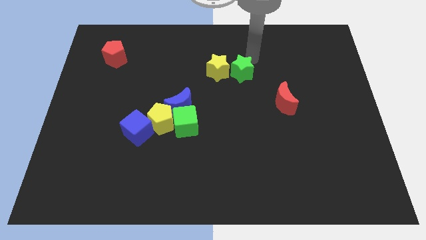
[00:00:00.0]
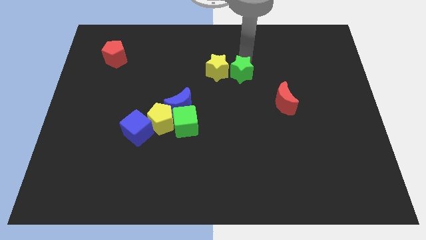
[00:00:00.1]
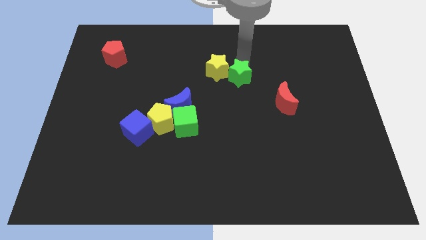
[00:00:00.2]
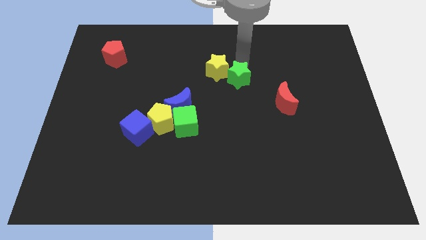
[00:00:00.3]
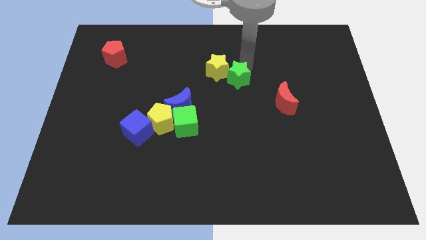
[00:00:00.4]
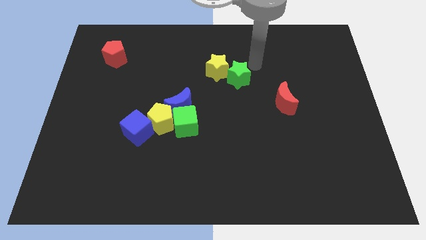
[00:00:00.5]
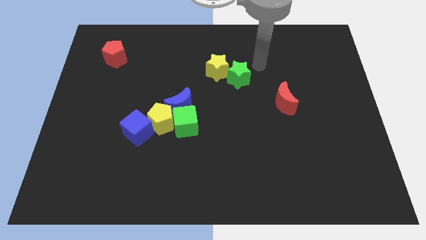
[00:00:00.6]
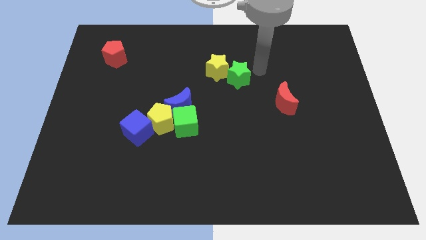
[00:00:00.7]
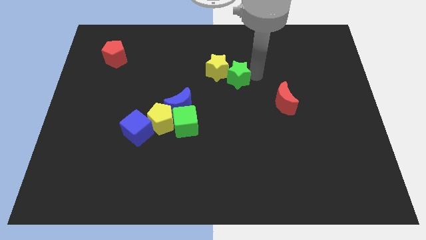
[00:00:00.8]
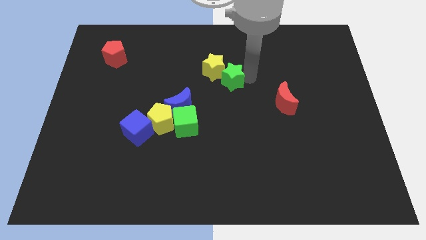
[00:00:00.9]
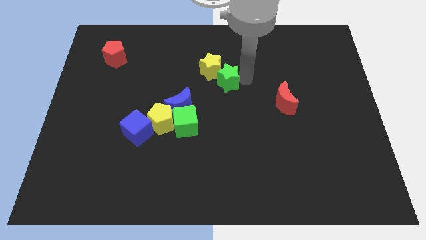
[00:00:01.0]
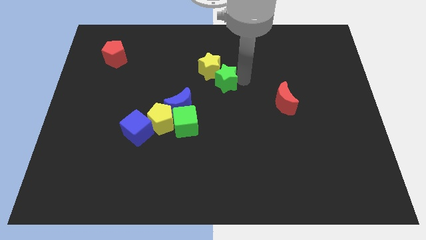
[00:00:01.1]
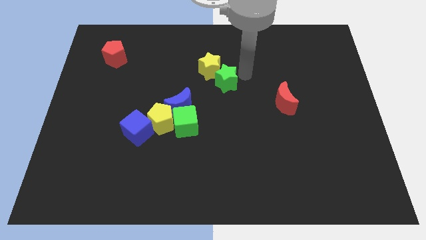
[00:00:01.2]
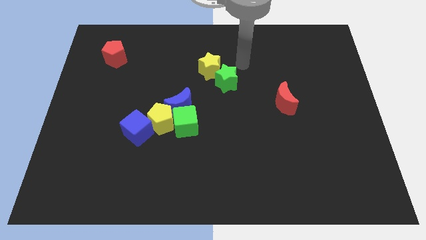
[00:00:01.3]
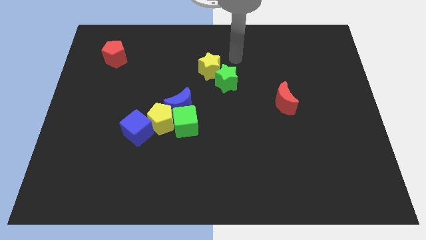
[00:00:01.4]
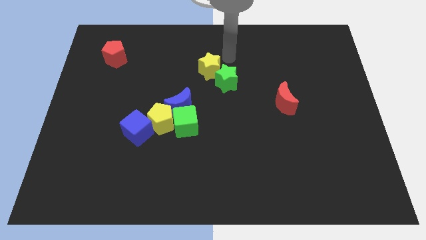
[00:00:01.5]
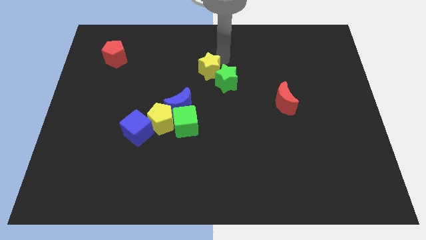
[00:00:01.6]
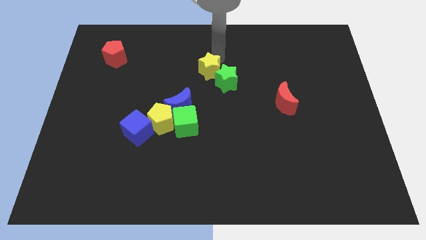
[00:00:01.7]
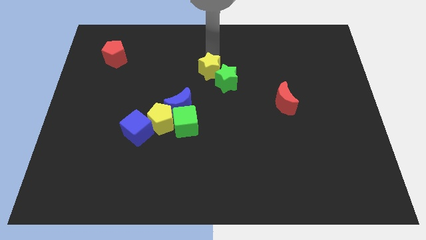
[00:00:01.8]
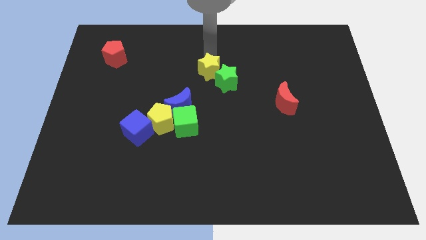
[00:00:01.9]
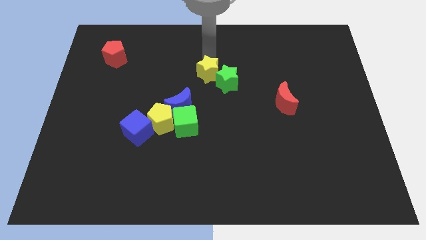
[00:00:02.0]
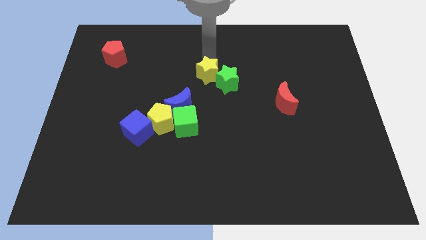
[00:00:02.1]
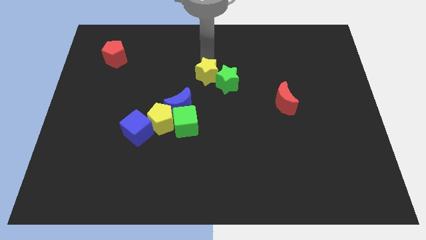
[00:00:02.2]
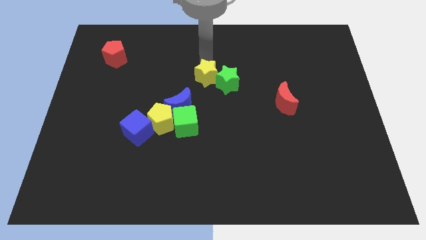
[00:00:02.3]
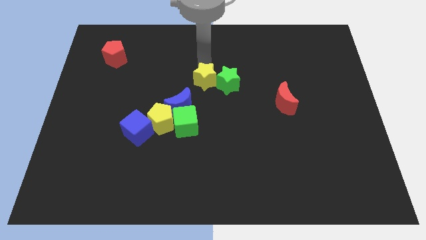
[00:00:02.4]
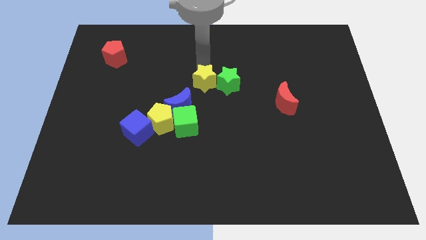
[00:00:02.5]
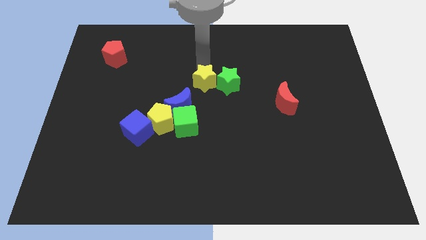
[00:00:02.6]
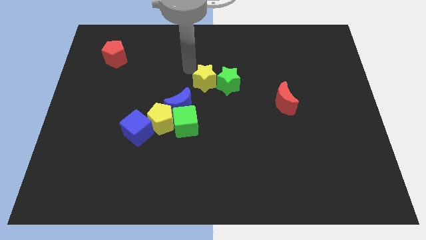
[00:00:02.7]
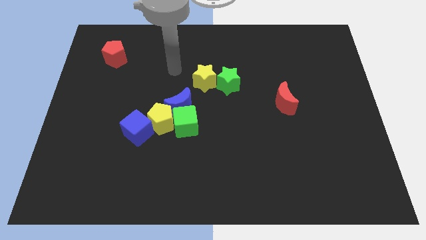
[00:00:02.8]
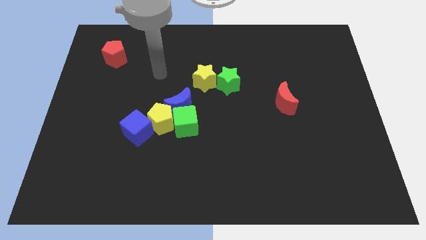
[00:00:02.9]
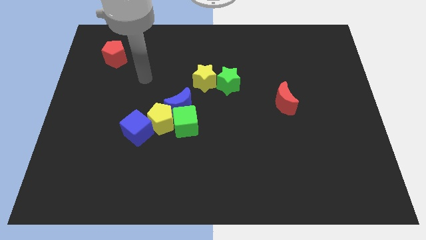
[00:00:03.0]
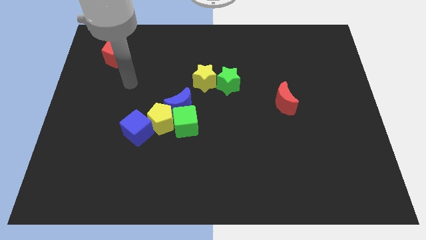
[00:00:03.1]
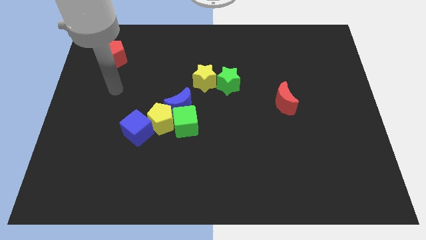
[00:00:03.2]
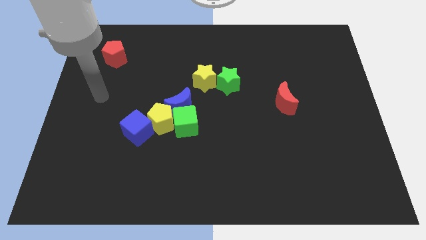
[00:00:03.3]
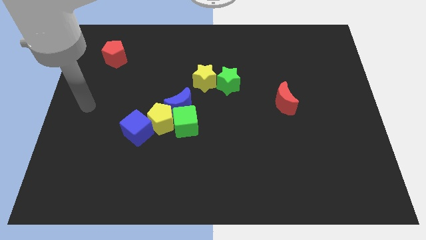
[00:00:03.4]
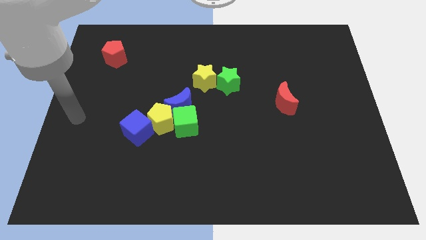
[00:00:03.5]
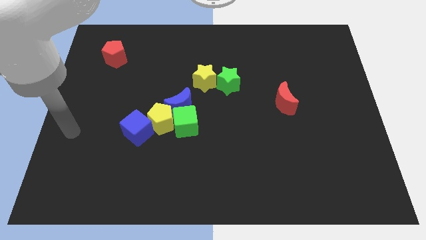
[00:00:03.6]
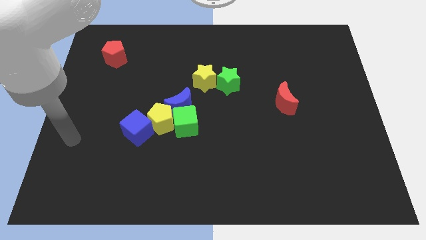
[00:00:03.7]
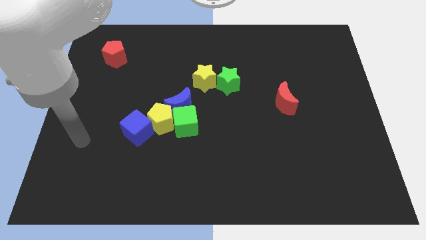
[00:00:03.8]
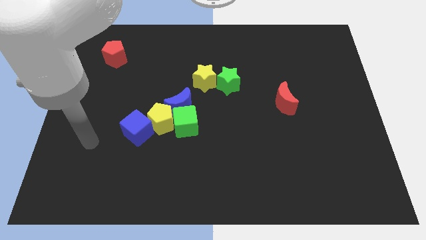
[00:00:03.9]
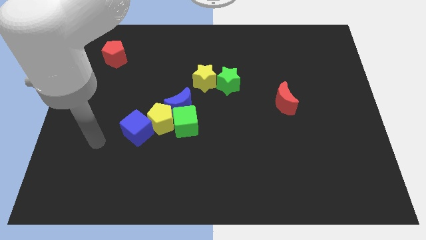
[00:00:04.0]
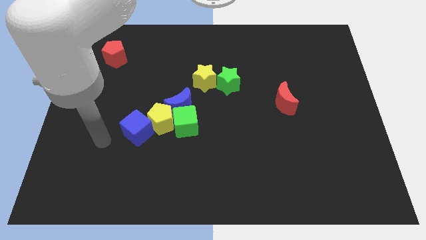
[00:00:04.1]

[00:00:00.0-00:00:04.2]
move the stars to the center of the board

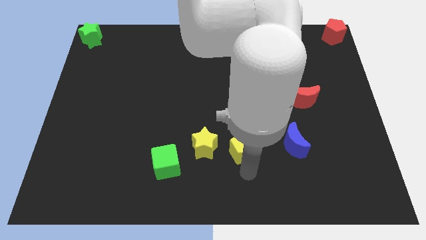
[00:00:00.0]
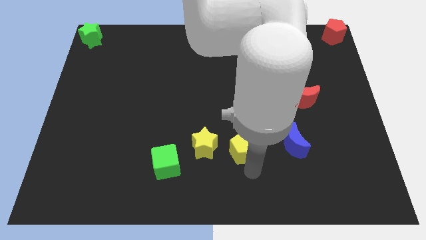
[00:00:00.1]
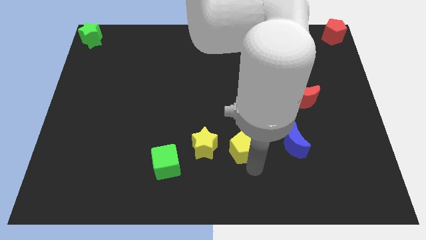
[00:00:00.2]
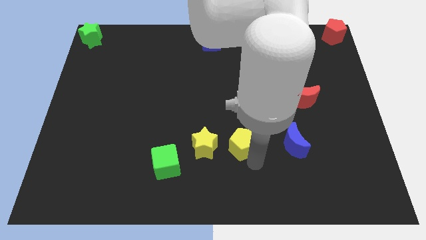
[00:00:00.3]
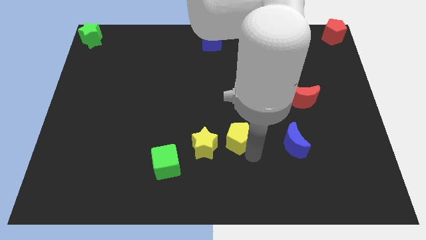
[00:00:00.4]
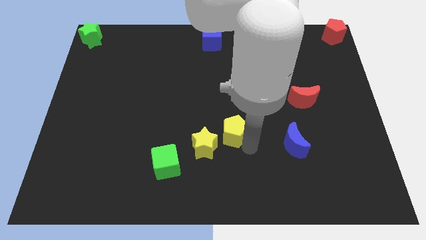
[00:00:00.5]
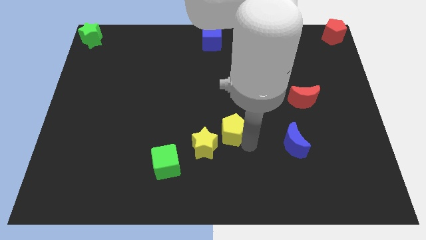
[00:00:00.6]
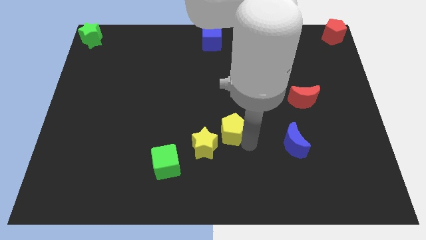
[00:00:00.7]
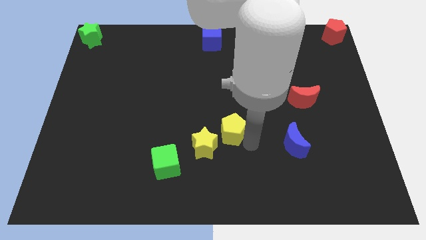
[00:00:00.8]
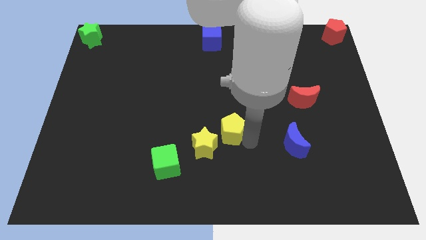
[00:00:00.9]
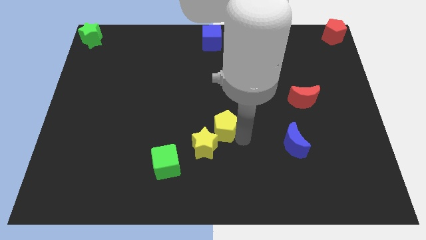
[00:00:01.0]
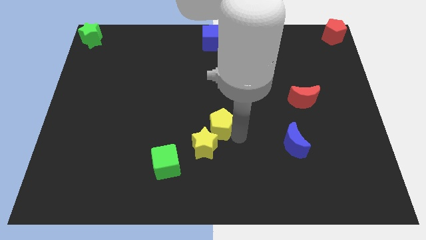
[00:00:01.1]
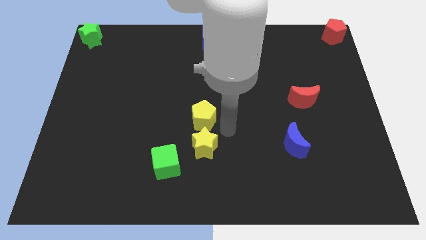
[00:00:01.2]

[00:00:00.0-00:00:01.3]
place the yellow pentagon above the yellow star

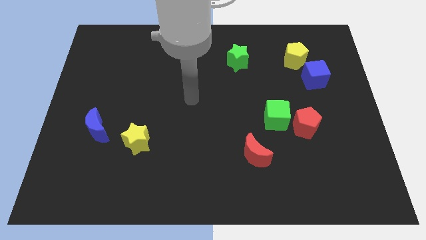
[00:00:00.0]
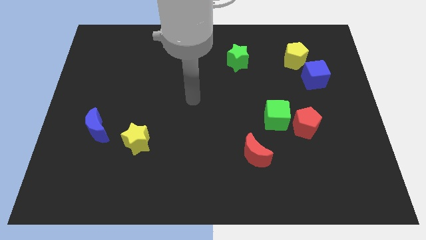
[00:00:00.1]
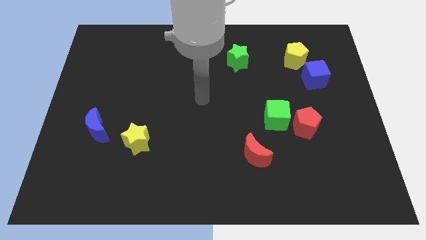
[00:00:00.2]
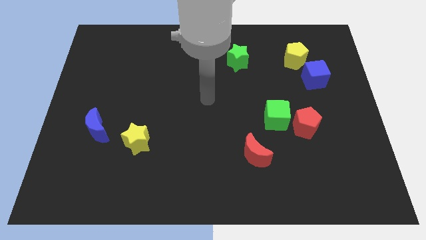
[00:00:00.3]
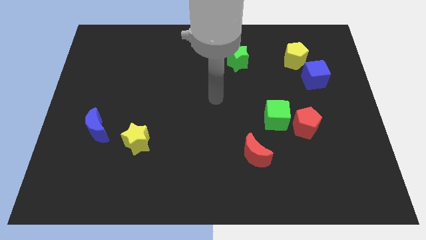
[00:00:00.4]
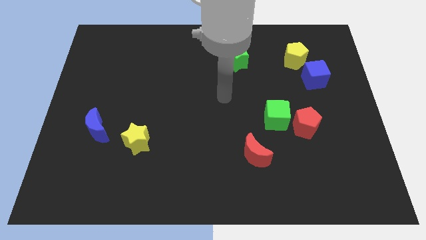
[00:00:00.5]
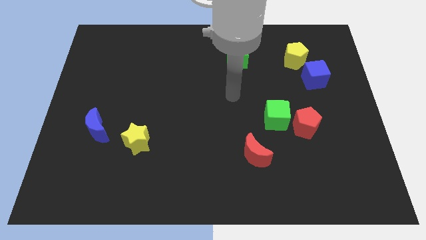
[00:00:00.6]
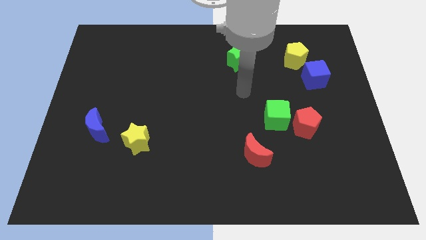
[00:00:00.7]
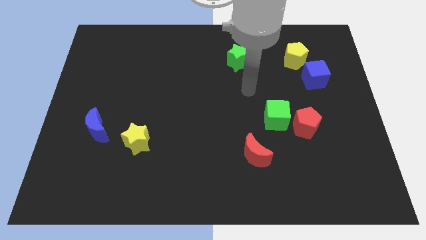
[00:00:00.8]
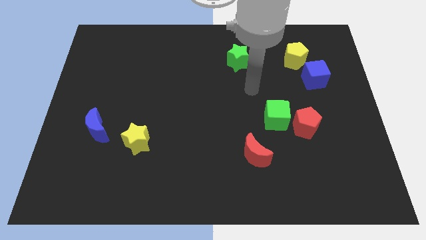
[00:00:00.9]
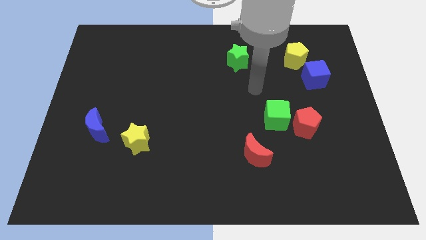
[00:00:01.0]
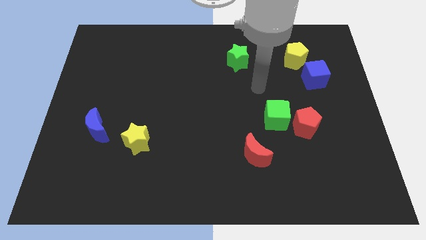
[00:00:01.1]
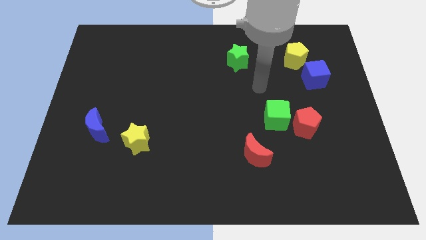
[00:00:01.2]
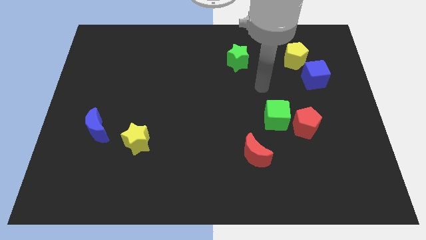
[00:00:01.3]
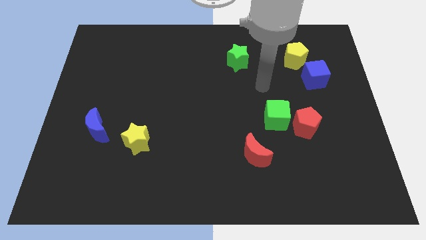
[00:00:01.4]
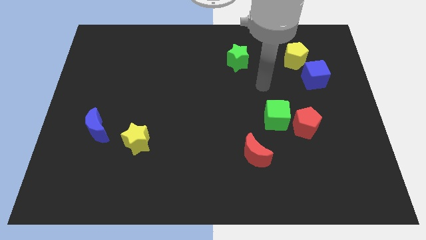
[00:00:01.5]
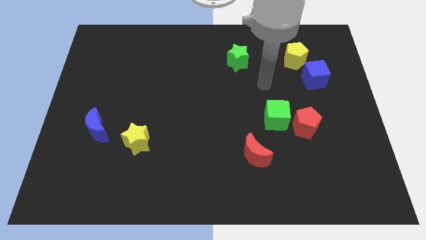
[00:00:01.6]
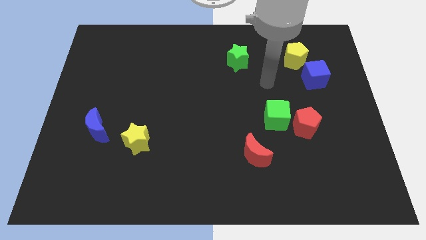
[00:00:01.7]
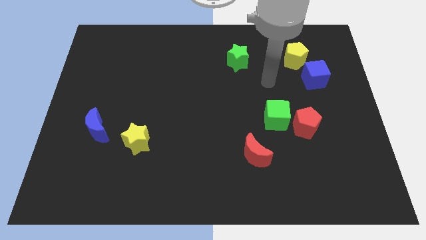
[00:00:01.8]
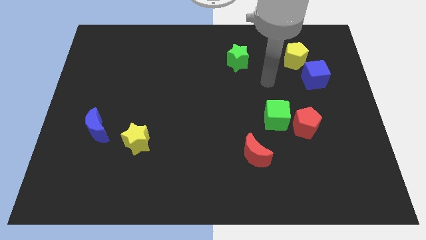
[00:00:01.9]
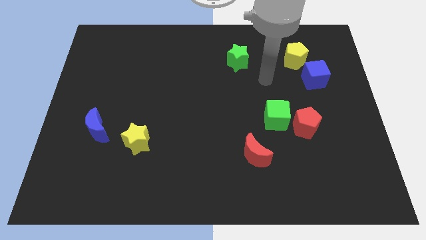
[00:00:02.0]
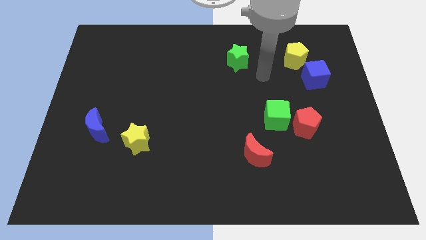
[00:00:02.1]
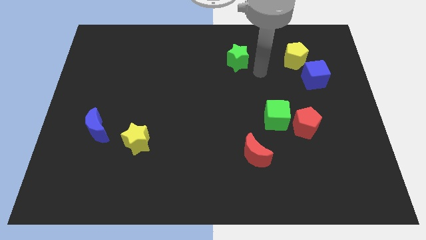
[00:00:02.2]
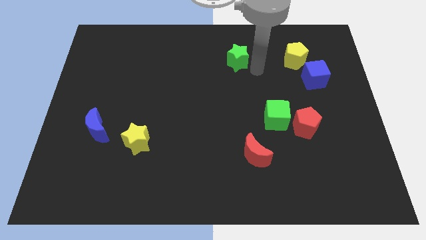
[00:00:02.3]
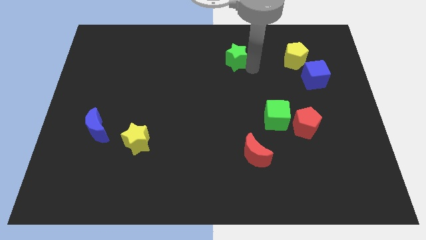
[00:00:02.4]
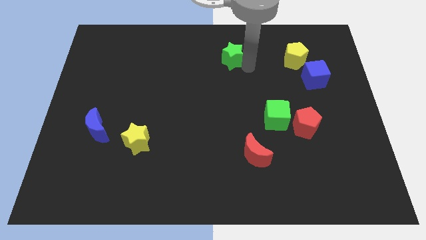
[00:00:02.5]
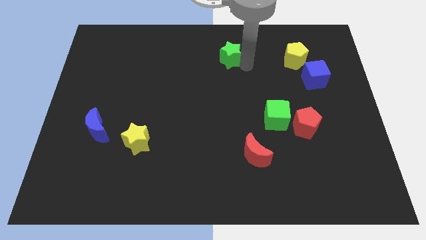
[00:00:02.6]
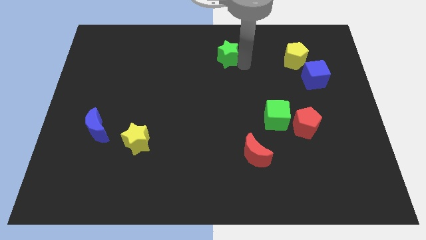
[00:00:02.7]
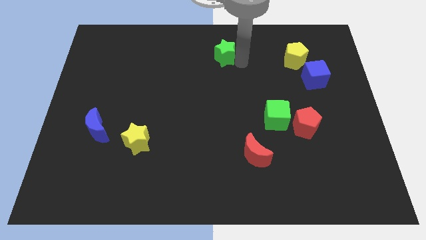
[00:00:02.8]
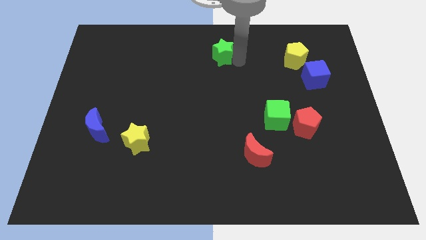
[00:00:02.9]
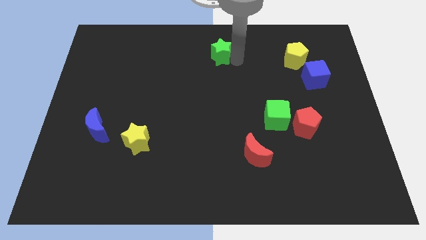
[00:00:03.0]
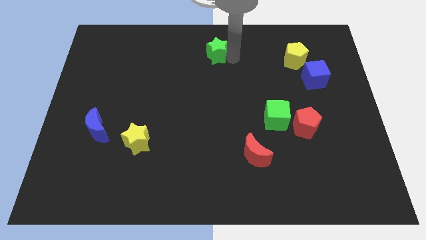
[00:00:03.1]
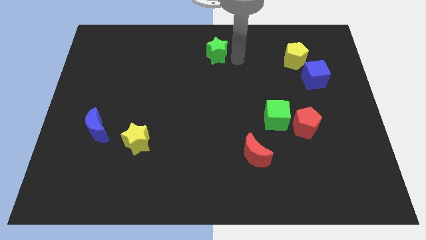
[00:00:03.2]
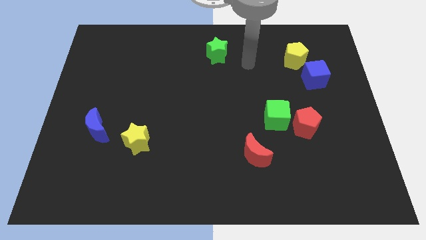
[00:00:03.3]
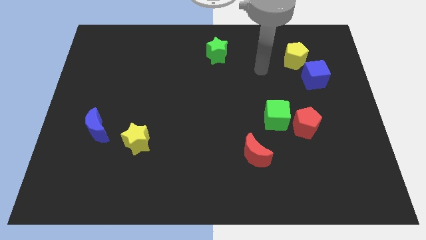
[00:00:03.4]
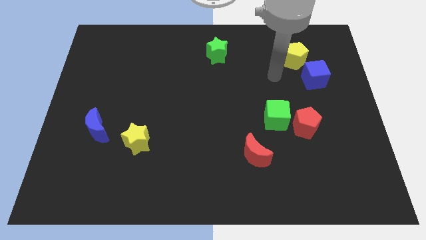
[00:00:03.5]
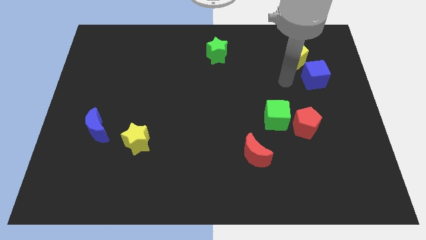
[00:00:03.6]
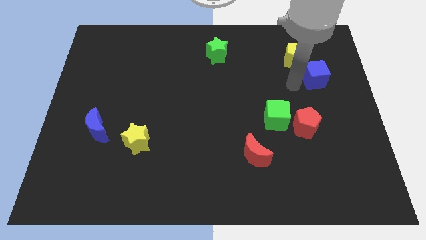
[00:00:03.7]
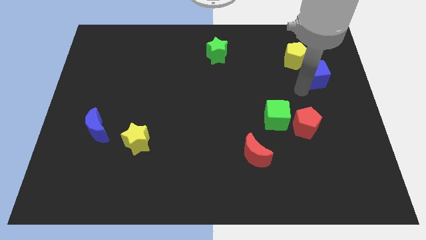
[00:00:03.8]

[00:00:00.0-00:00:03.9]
push the green star towards the top centre of the board
